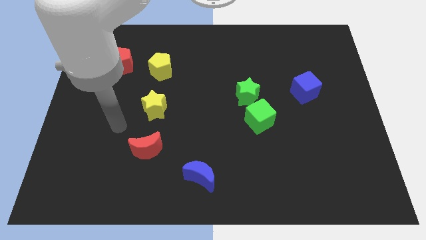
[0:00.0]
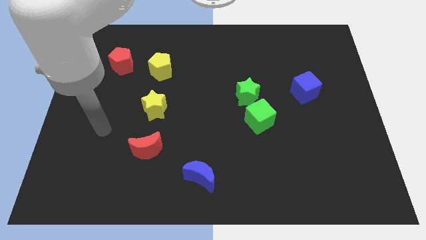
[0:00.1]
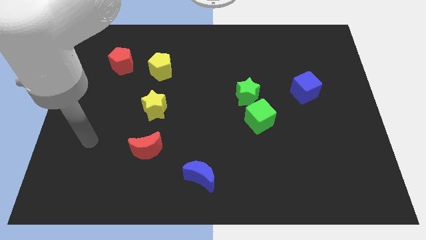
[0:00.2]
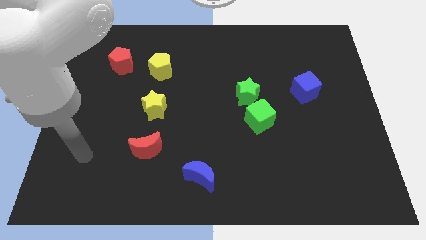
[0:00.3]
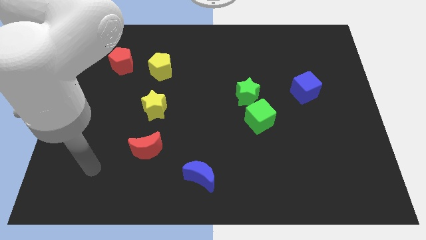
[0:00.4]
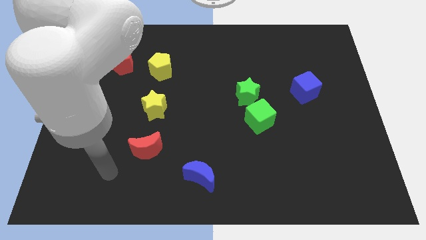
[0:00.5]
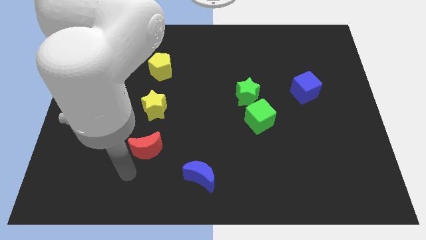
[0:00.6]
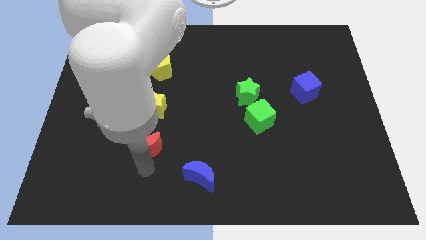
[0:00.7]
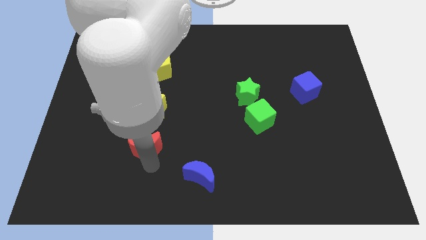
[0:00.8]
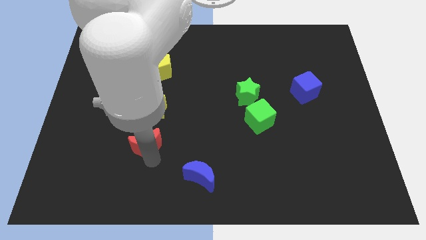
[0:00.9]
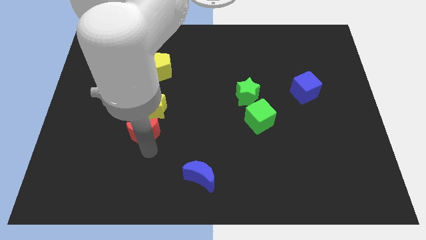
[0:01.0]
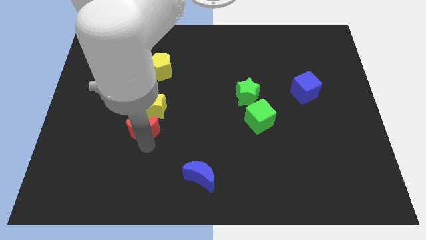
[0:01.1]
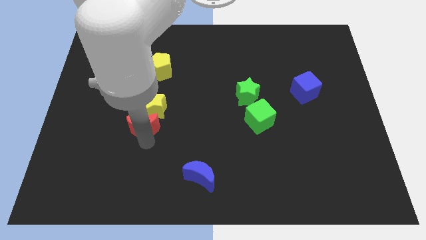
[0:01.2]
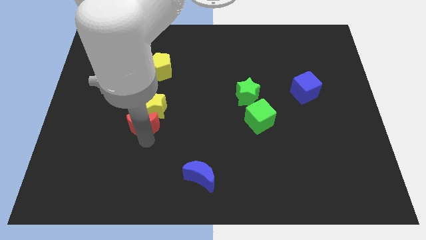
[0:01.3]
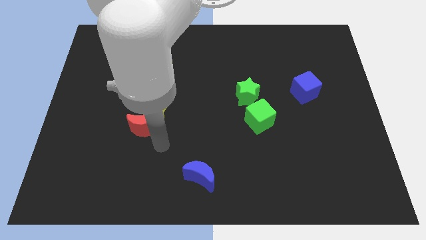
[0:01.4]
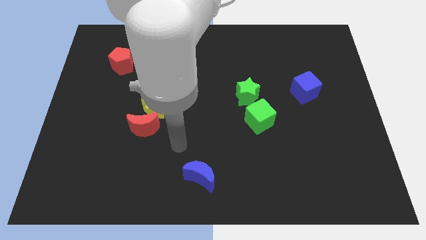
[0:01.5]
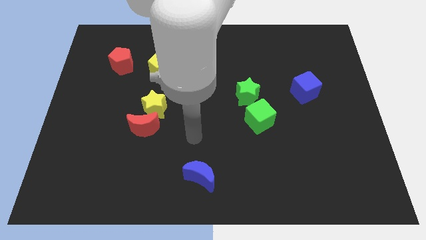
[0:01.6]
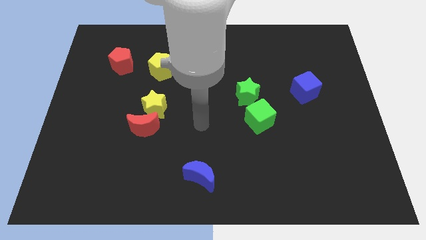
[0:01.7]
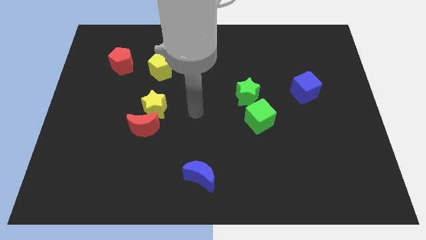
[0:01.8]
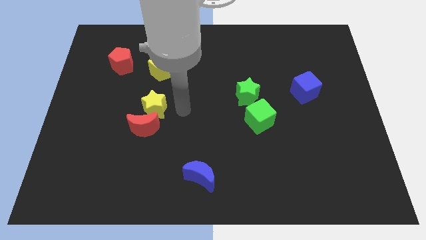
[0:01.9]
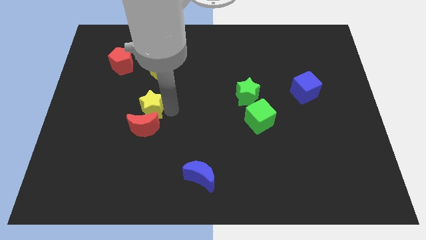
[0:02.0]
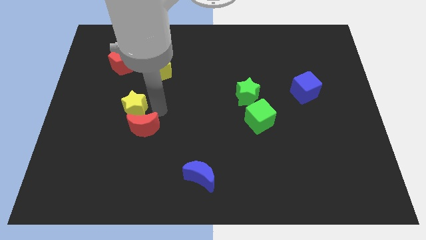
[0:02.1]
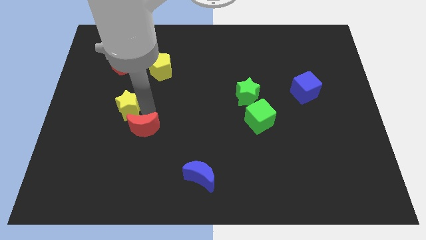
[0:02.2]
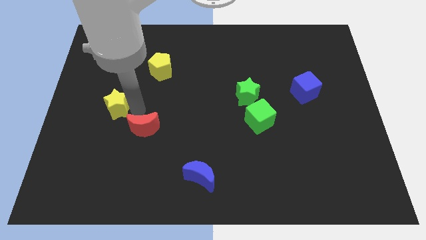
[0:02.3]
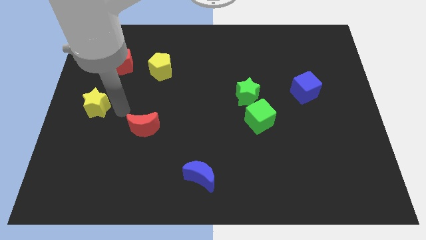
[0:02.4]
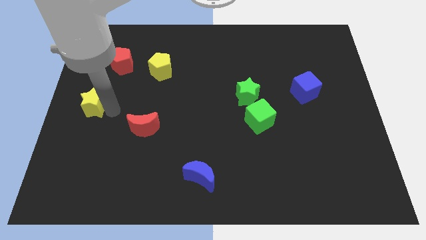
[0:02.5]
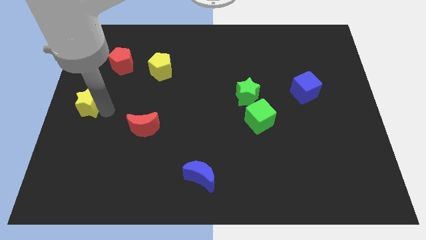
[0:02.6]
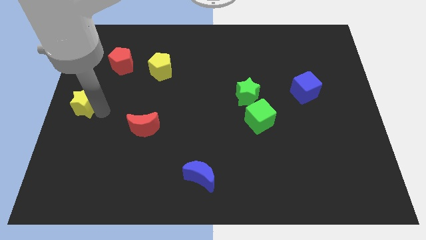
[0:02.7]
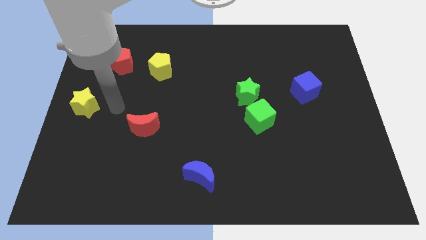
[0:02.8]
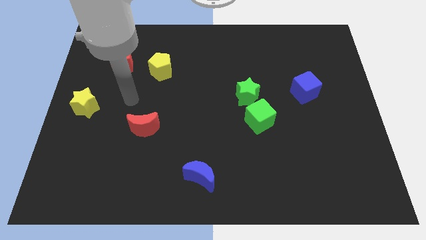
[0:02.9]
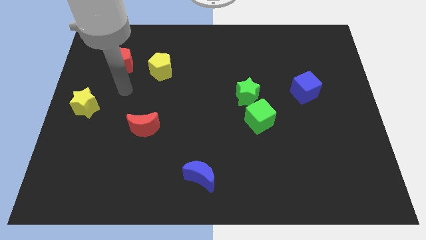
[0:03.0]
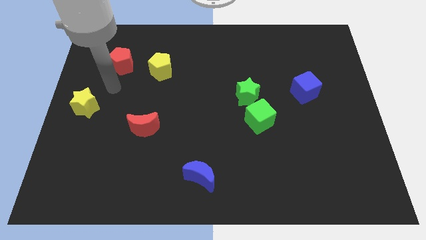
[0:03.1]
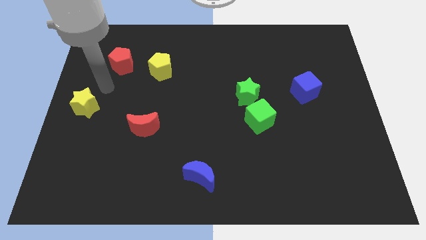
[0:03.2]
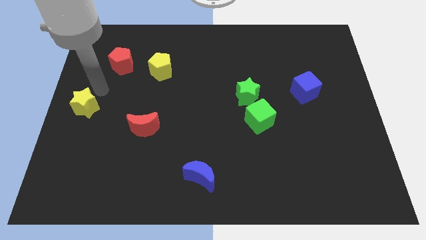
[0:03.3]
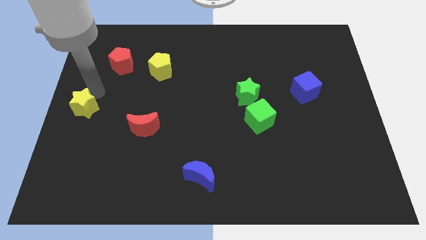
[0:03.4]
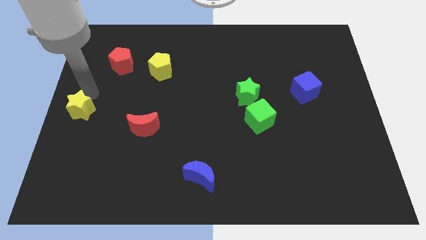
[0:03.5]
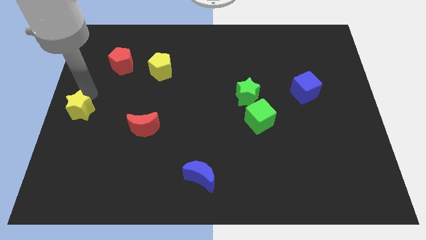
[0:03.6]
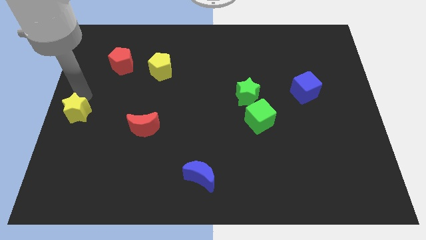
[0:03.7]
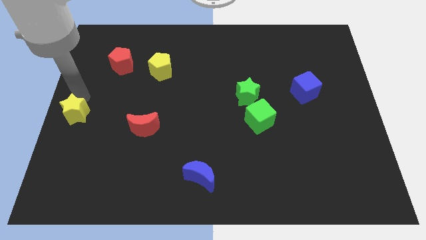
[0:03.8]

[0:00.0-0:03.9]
place the yellow star towards the left middle end

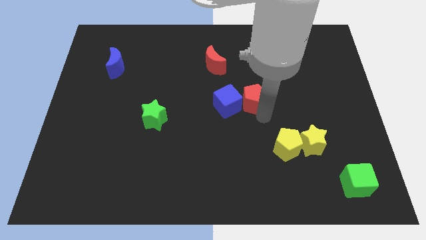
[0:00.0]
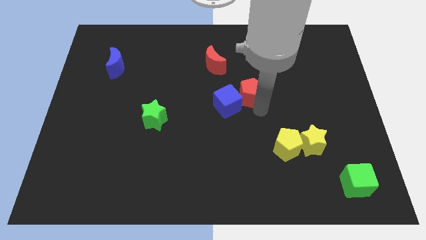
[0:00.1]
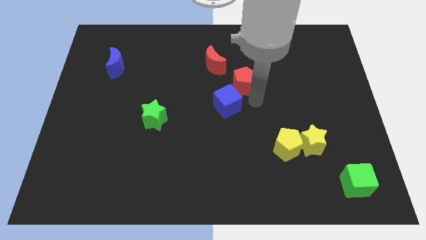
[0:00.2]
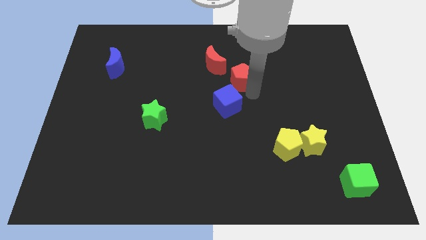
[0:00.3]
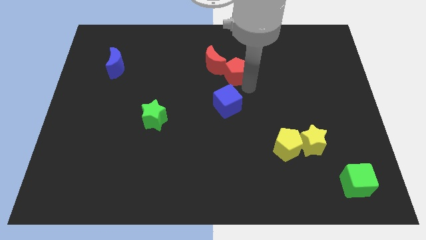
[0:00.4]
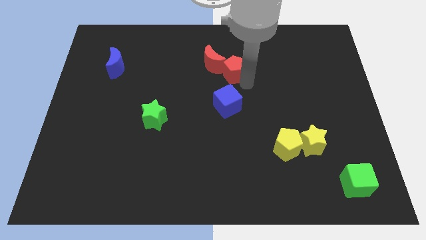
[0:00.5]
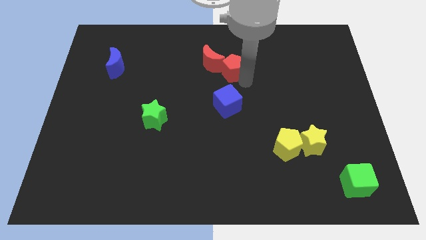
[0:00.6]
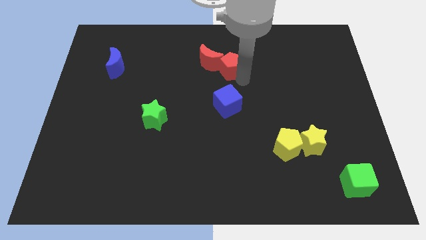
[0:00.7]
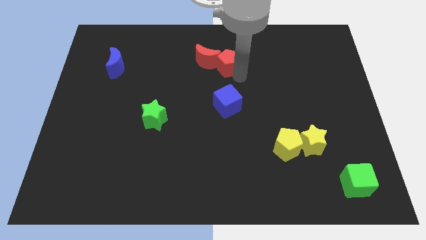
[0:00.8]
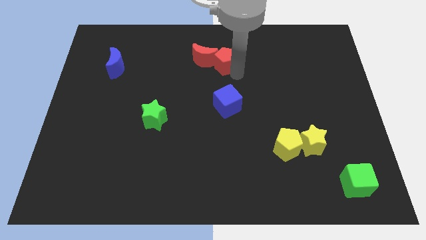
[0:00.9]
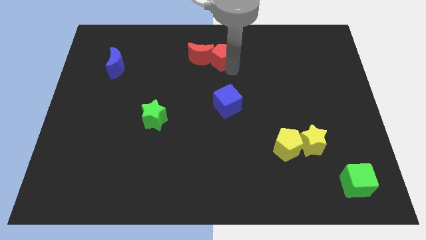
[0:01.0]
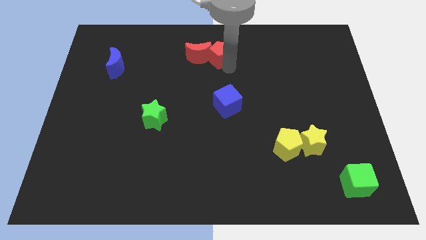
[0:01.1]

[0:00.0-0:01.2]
push the red pentagon to the right side of the red crescent

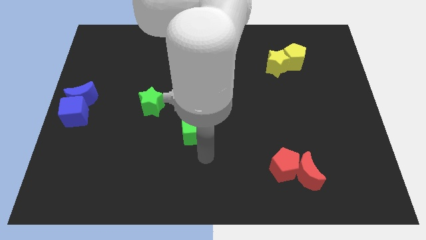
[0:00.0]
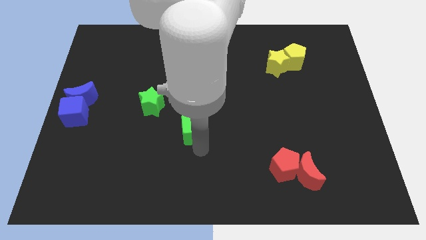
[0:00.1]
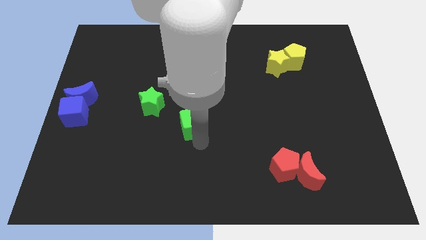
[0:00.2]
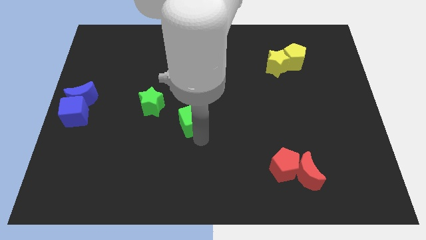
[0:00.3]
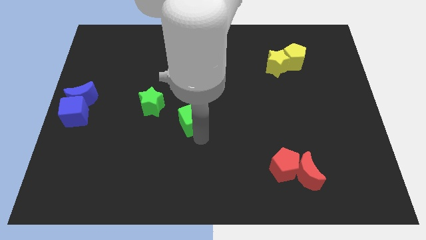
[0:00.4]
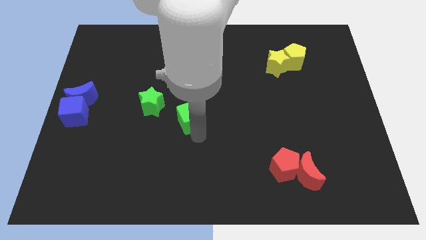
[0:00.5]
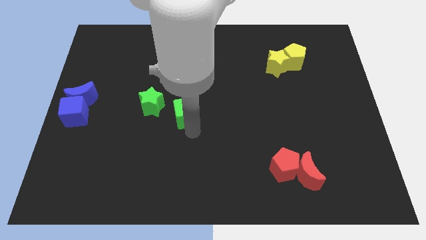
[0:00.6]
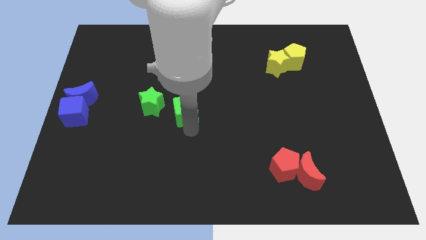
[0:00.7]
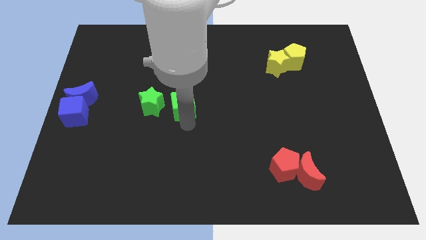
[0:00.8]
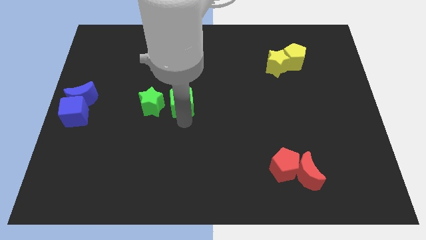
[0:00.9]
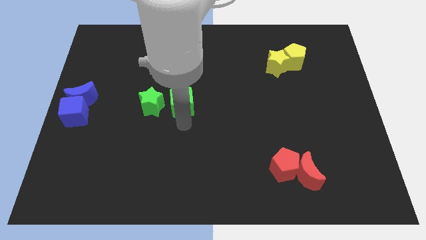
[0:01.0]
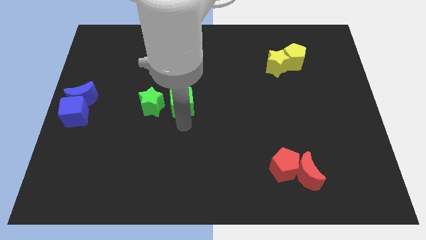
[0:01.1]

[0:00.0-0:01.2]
put the green cube on the right side of the green star

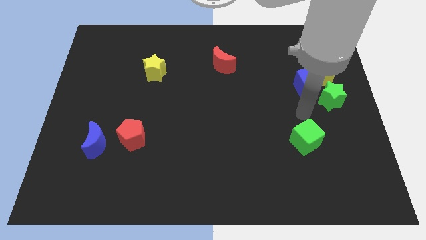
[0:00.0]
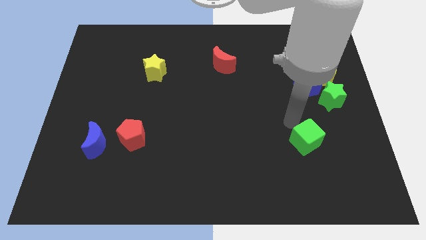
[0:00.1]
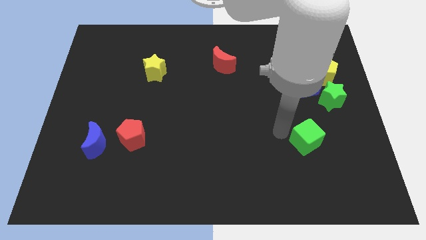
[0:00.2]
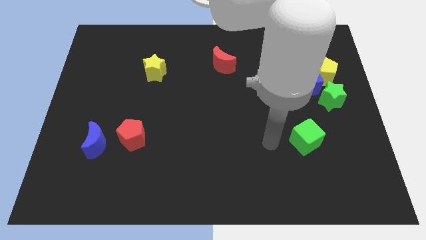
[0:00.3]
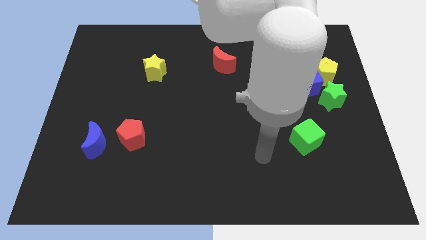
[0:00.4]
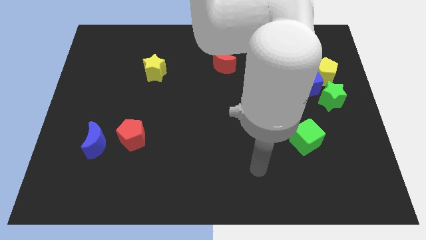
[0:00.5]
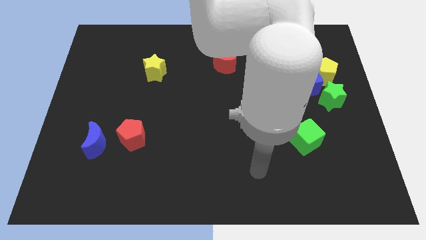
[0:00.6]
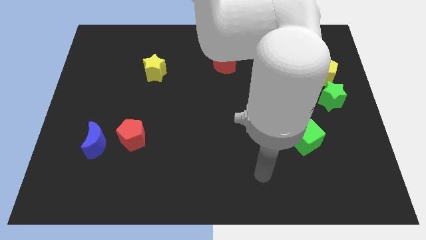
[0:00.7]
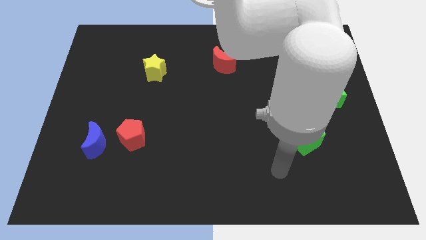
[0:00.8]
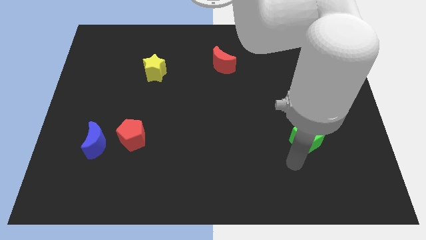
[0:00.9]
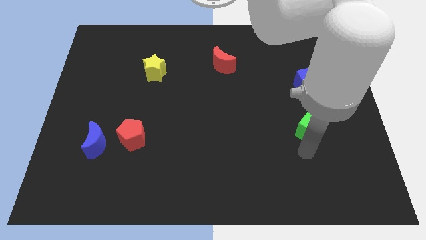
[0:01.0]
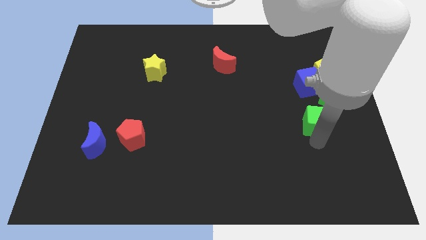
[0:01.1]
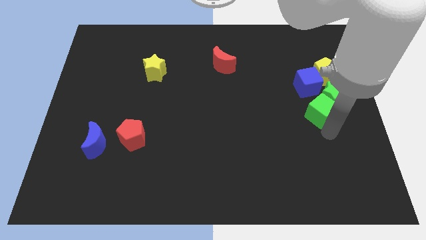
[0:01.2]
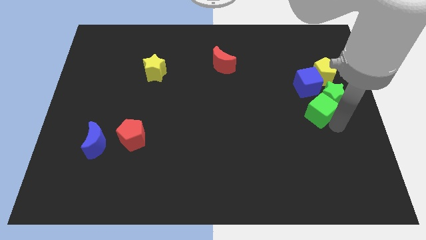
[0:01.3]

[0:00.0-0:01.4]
move the green cube to the bottom of the blue cube

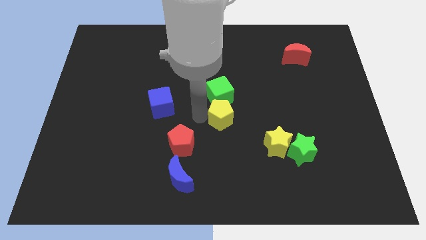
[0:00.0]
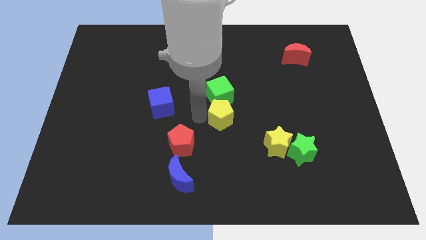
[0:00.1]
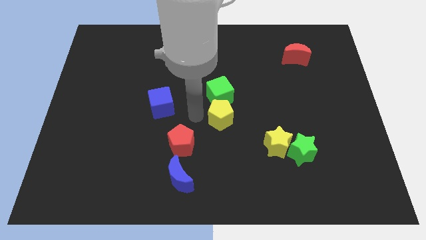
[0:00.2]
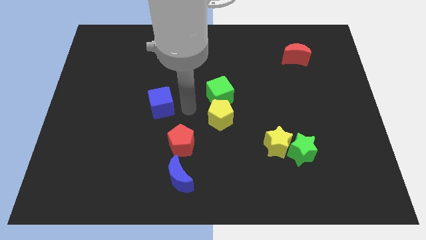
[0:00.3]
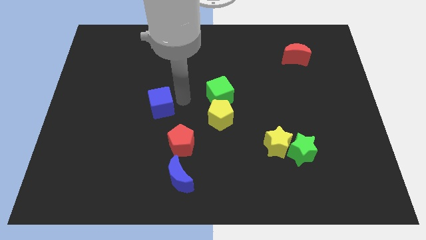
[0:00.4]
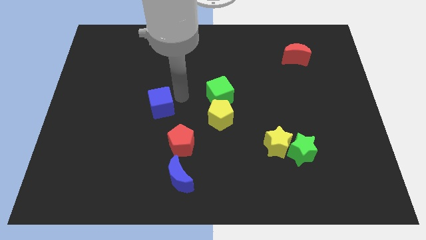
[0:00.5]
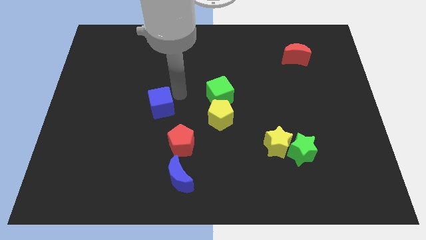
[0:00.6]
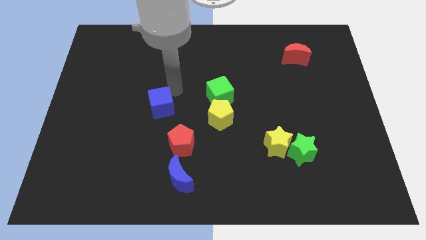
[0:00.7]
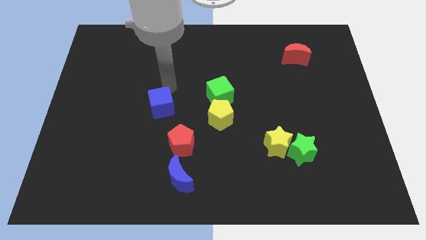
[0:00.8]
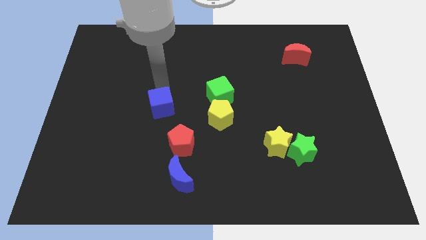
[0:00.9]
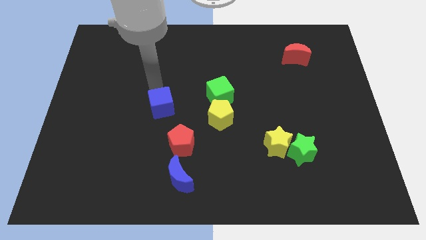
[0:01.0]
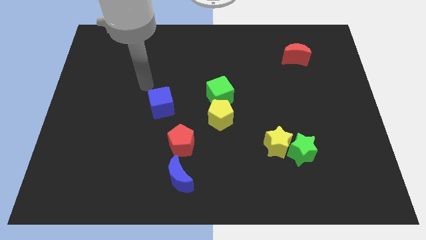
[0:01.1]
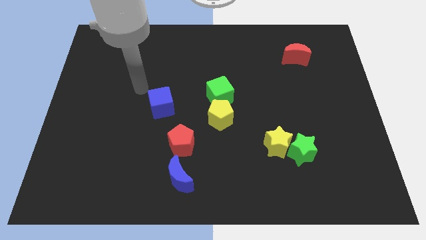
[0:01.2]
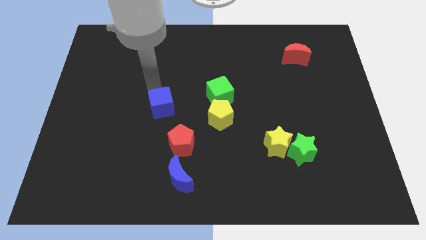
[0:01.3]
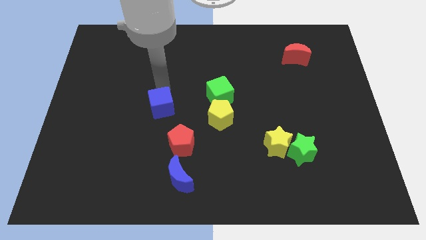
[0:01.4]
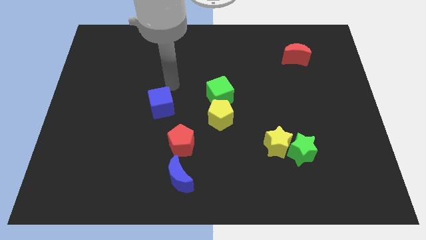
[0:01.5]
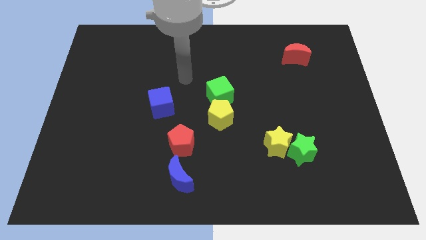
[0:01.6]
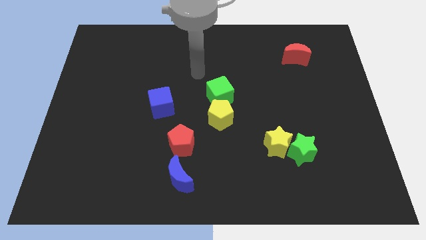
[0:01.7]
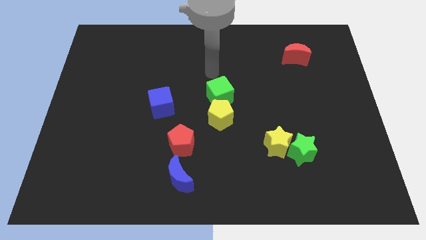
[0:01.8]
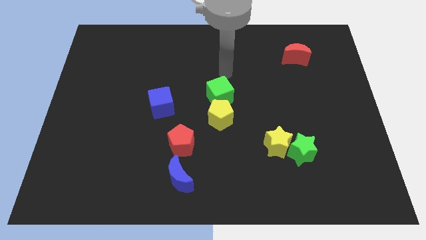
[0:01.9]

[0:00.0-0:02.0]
point your arm at the top side of the green cube
